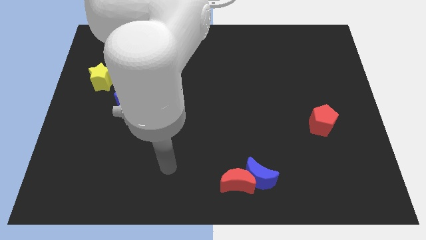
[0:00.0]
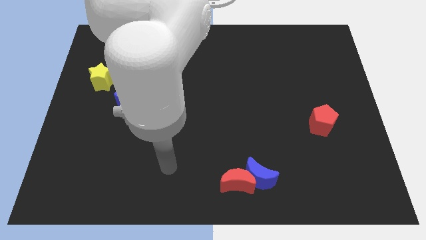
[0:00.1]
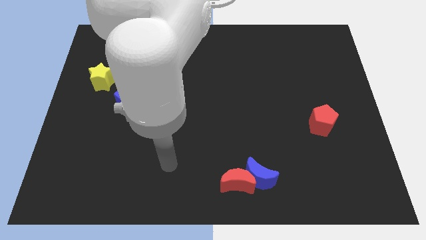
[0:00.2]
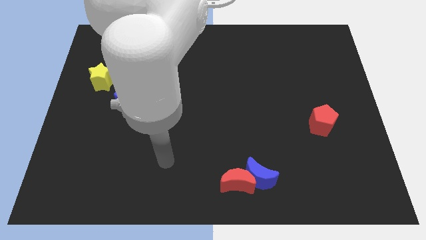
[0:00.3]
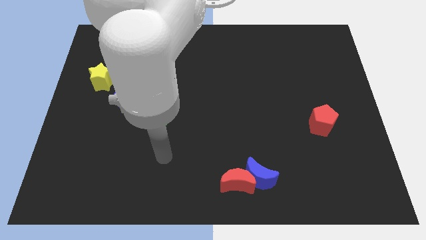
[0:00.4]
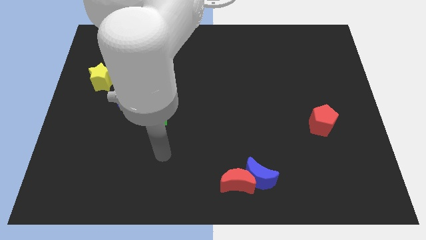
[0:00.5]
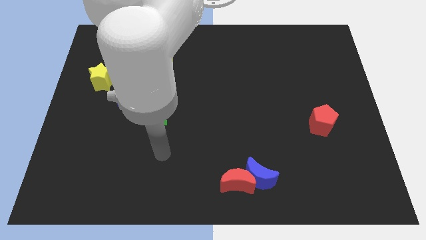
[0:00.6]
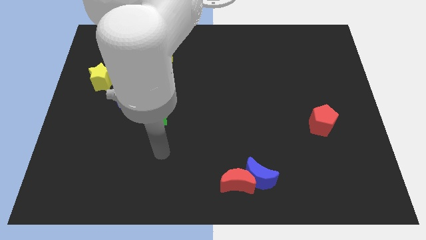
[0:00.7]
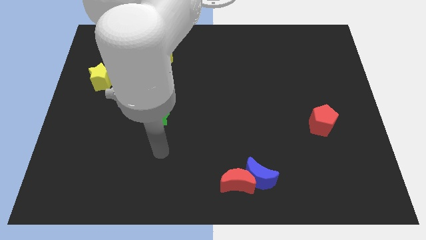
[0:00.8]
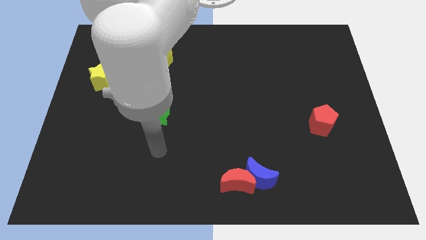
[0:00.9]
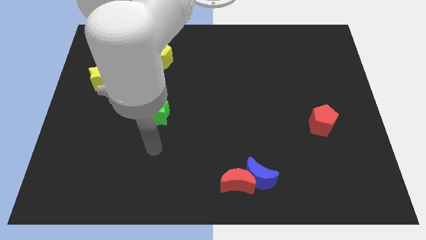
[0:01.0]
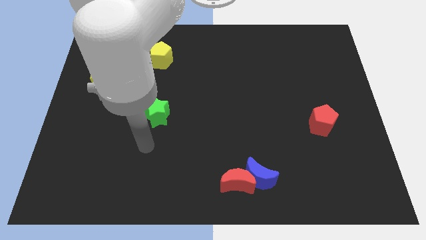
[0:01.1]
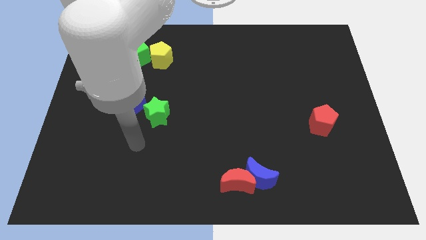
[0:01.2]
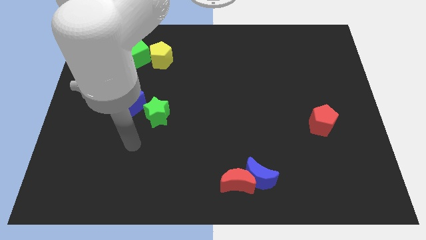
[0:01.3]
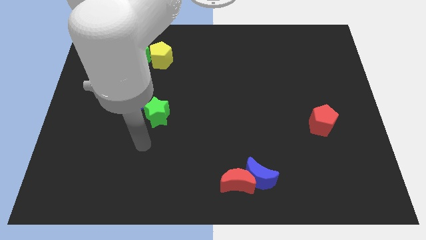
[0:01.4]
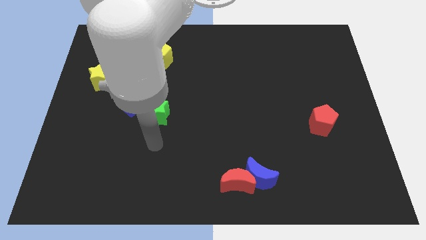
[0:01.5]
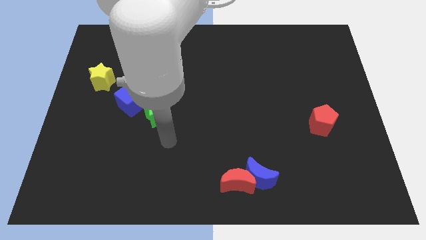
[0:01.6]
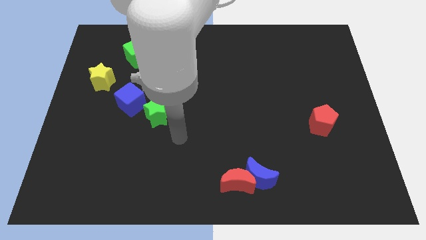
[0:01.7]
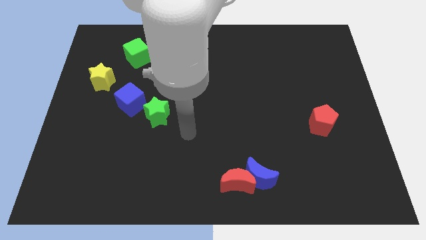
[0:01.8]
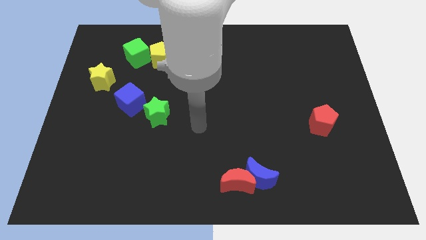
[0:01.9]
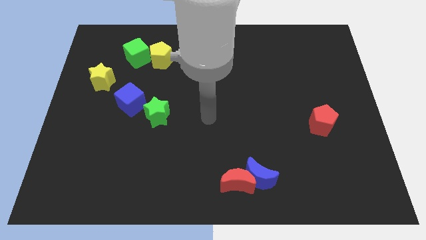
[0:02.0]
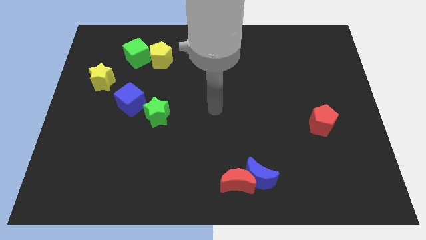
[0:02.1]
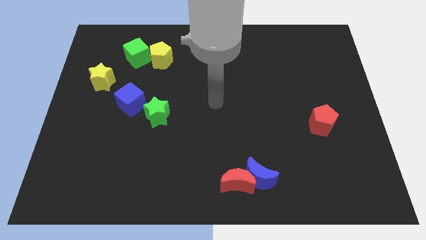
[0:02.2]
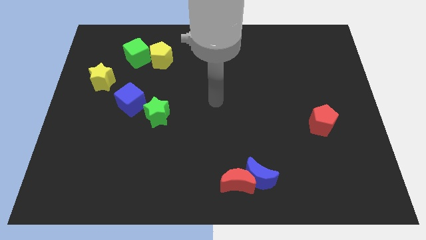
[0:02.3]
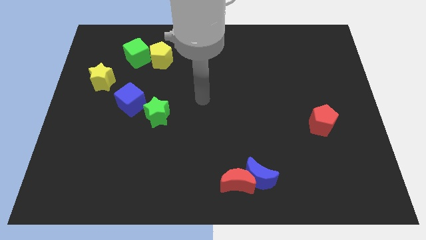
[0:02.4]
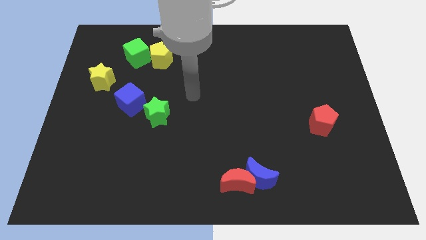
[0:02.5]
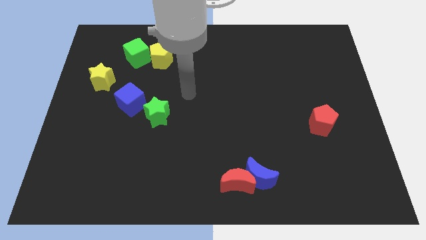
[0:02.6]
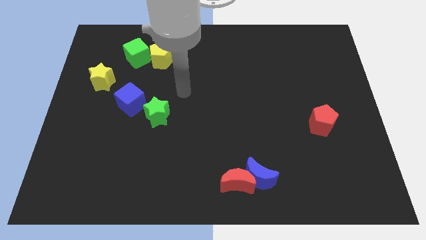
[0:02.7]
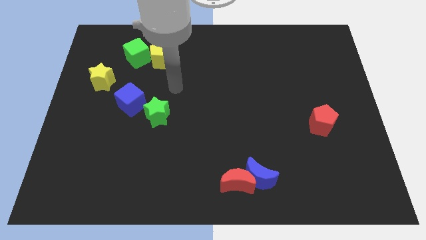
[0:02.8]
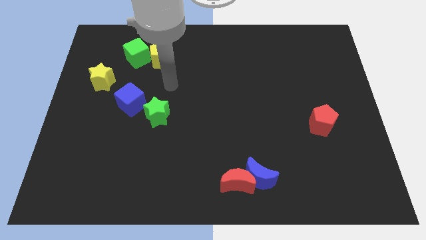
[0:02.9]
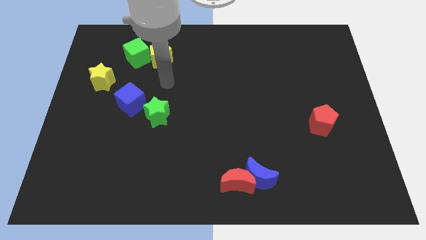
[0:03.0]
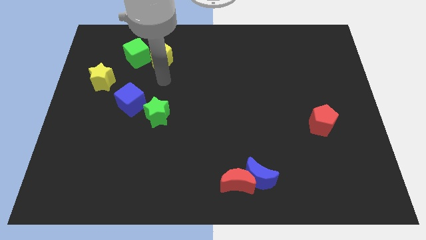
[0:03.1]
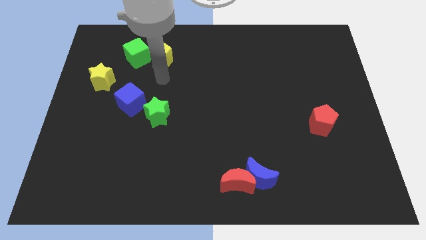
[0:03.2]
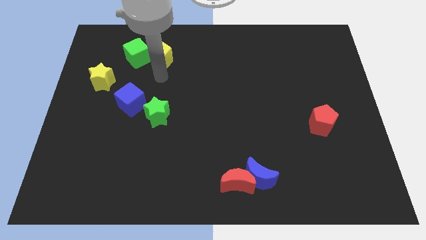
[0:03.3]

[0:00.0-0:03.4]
move your arm without touching any object

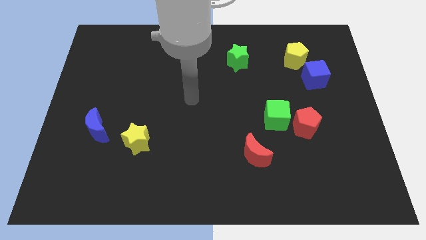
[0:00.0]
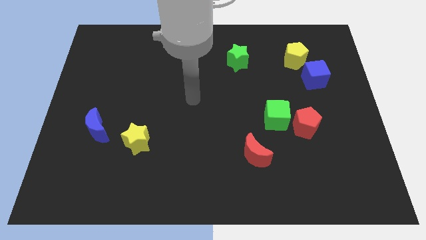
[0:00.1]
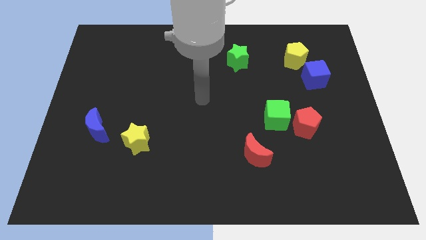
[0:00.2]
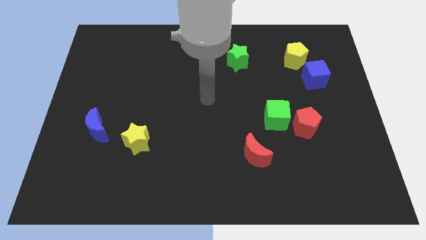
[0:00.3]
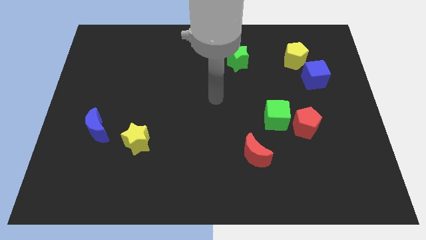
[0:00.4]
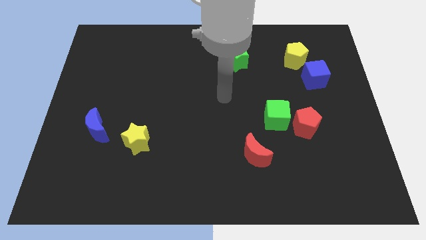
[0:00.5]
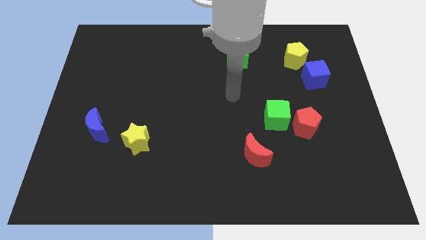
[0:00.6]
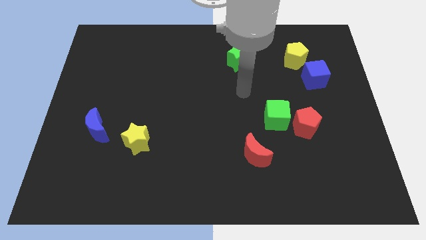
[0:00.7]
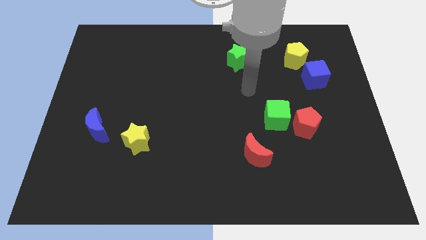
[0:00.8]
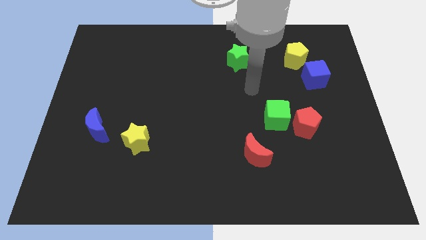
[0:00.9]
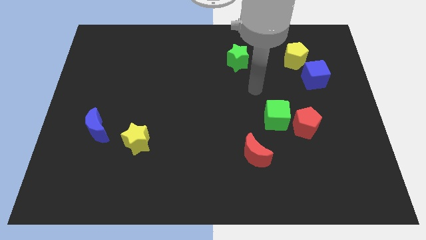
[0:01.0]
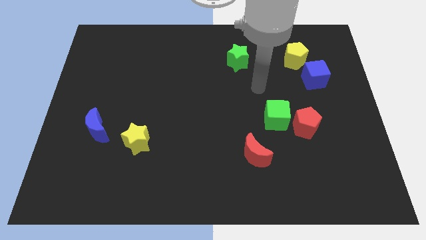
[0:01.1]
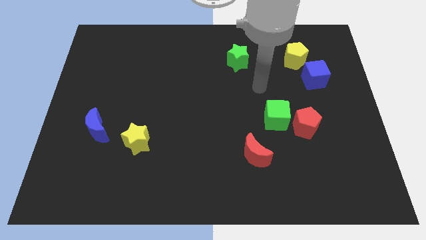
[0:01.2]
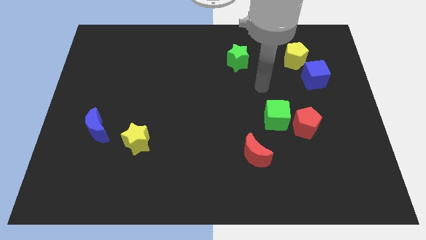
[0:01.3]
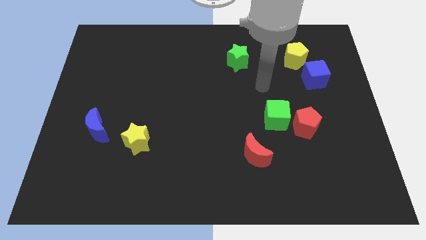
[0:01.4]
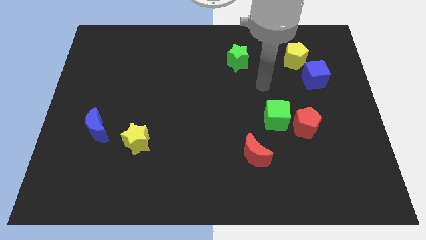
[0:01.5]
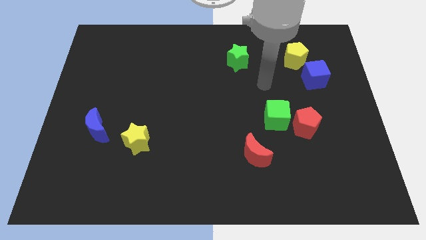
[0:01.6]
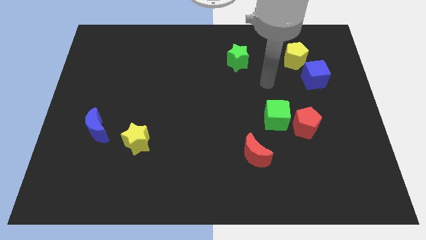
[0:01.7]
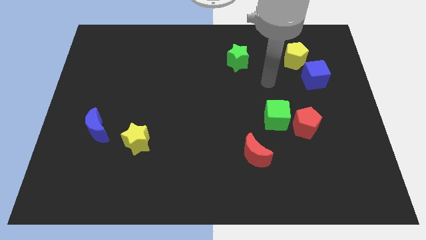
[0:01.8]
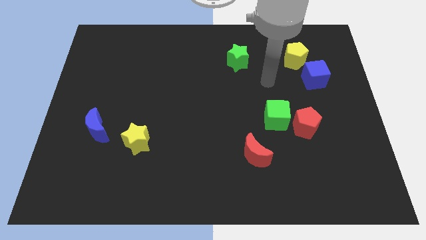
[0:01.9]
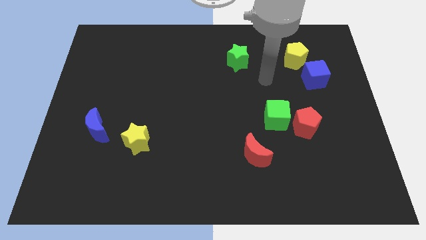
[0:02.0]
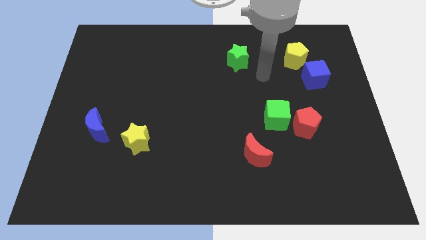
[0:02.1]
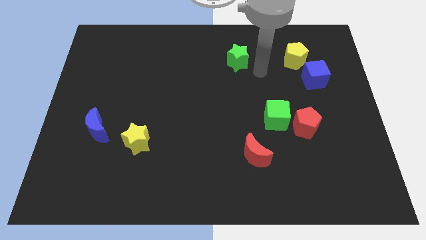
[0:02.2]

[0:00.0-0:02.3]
move robot arm towards green star

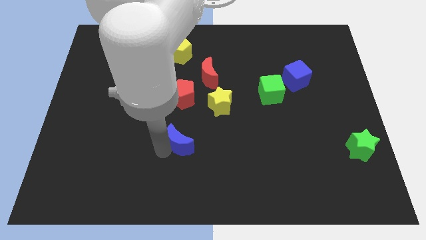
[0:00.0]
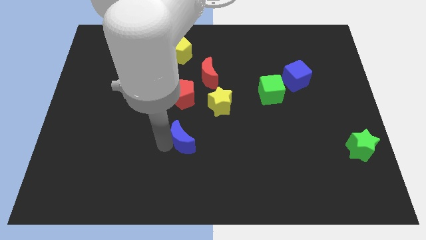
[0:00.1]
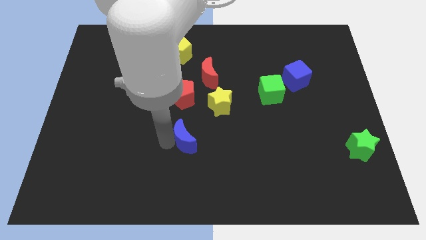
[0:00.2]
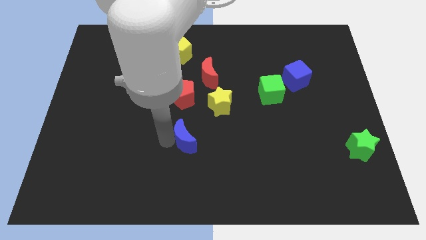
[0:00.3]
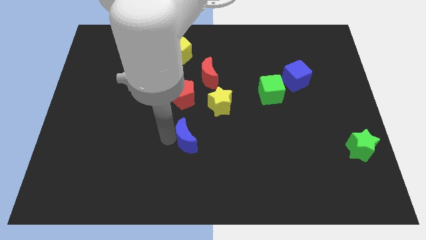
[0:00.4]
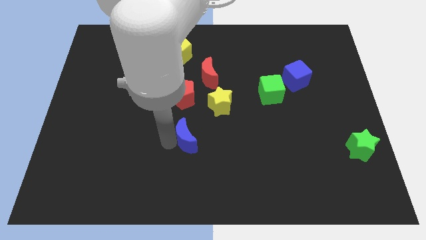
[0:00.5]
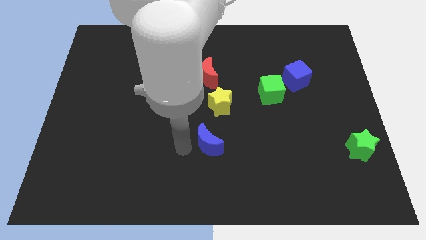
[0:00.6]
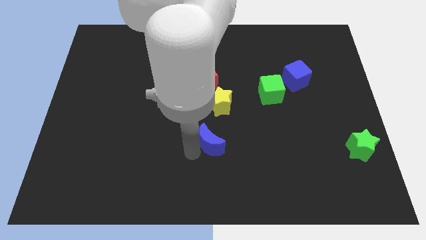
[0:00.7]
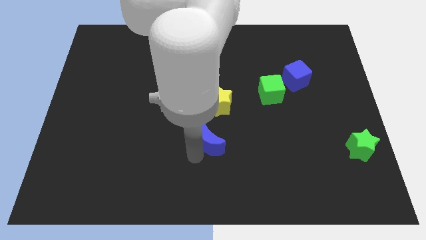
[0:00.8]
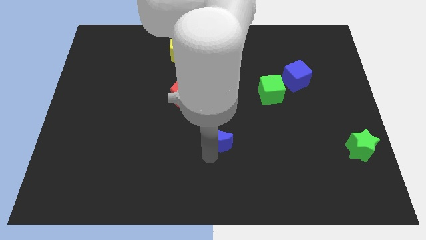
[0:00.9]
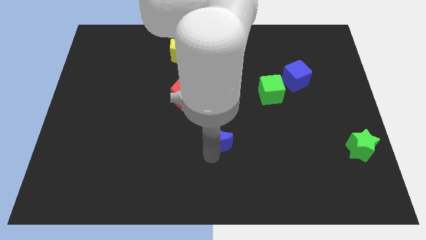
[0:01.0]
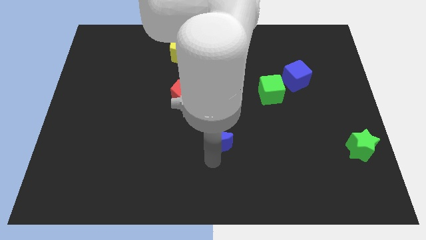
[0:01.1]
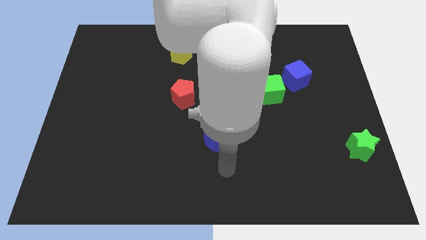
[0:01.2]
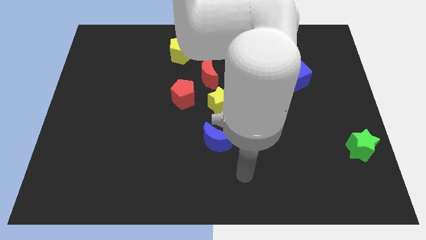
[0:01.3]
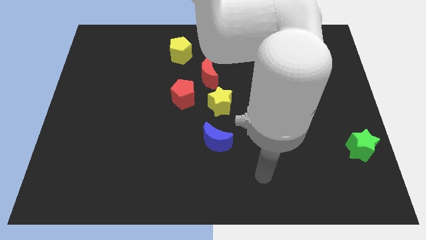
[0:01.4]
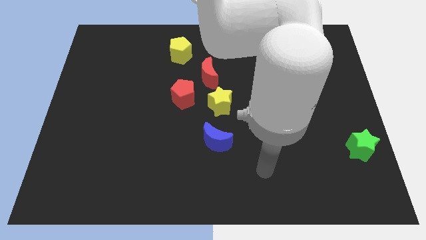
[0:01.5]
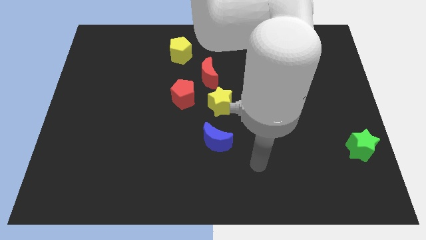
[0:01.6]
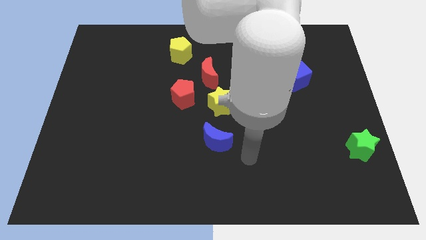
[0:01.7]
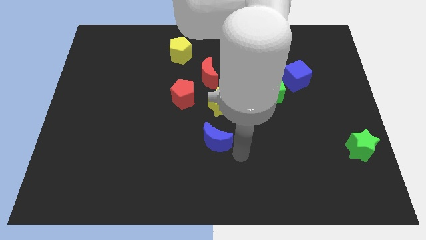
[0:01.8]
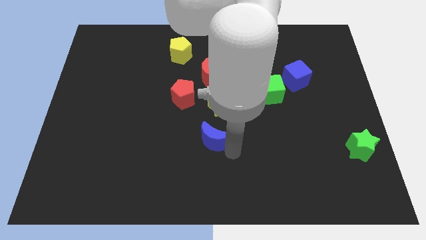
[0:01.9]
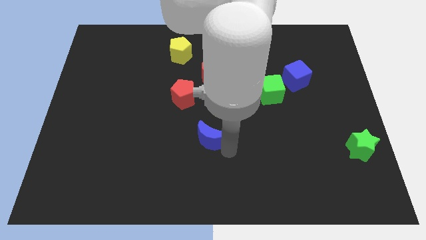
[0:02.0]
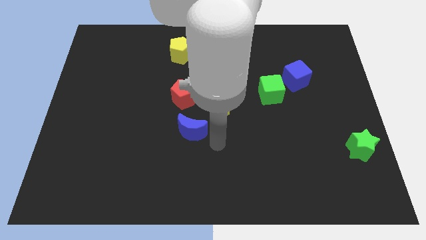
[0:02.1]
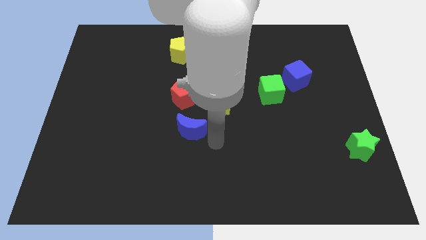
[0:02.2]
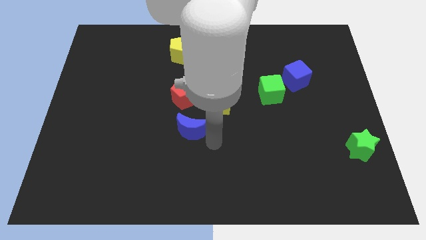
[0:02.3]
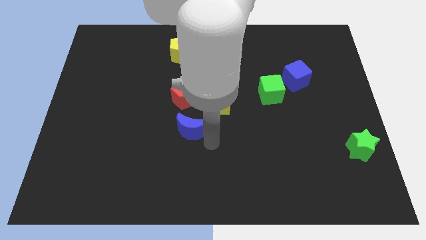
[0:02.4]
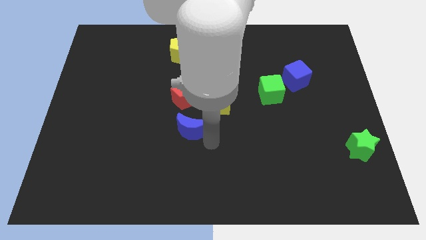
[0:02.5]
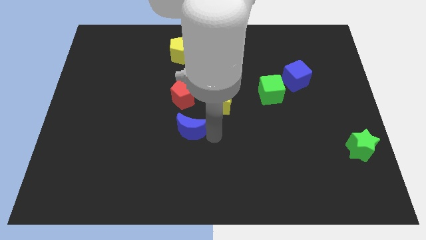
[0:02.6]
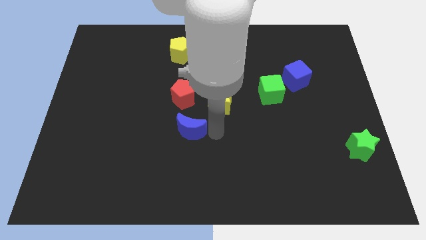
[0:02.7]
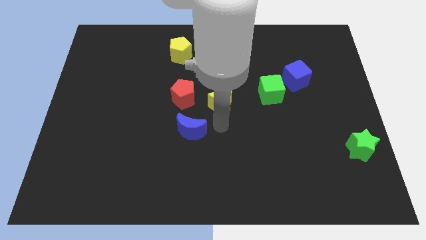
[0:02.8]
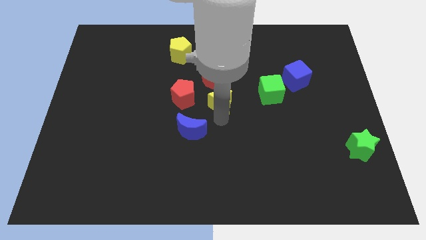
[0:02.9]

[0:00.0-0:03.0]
move the blue crescent to the bottom left of the yellow star

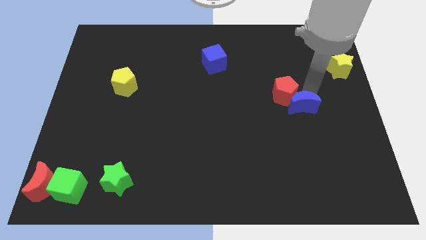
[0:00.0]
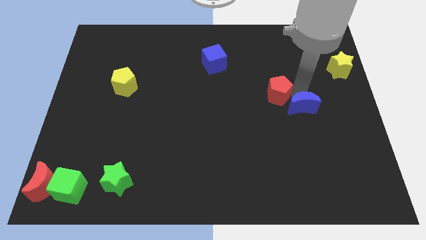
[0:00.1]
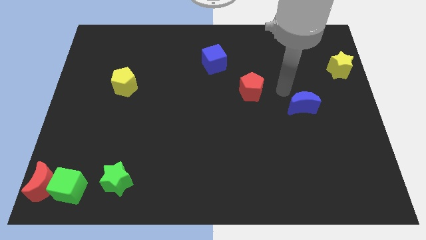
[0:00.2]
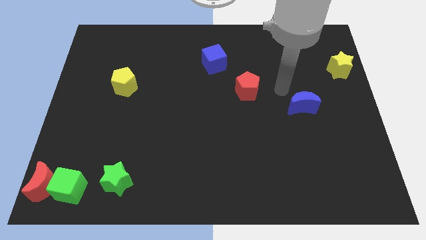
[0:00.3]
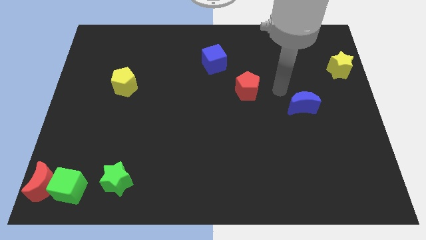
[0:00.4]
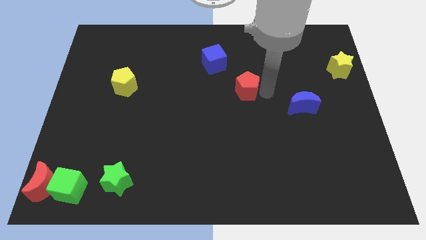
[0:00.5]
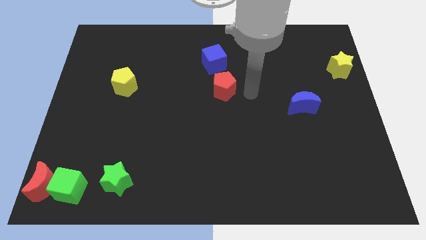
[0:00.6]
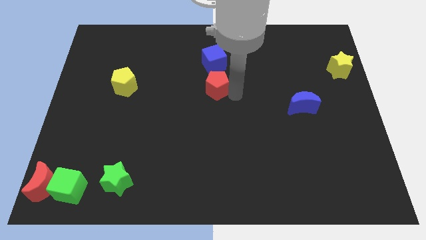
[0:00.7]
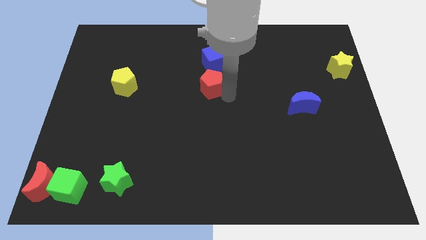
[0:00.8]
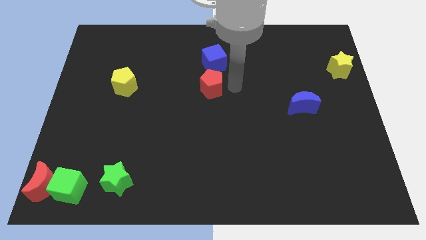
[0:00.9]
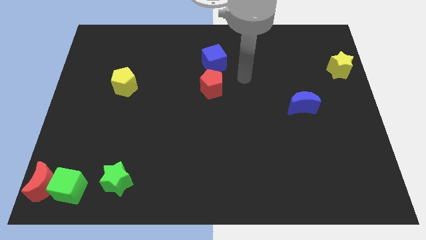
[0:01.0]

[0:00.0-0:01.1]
push the red pentagon to the bottom of the blue cube
